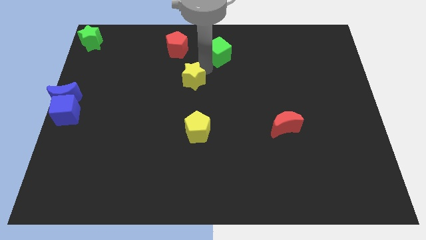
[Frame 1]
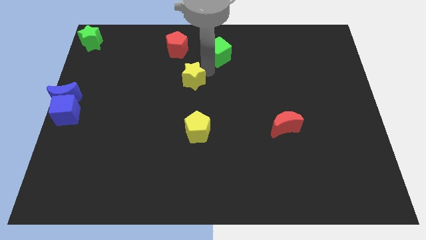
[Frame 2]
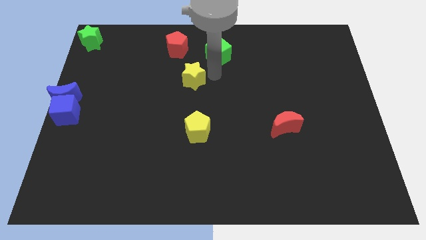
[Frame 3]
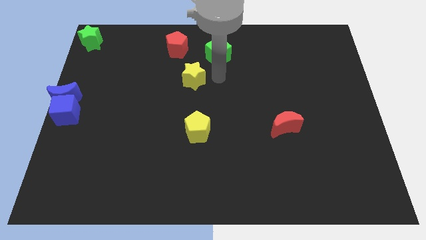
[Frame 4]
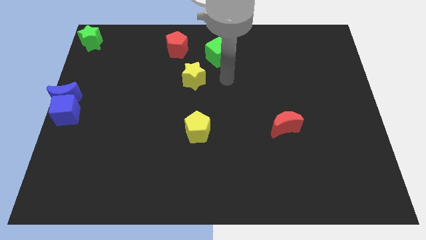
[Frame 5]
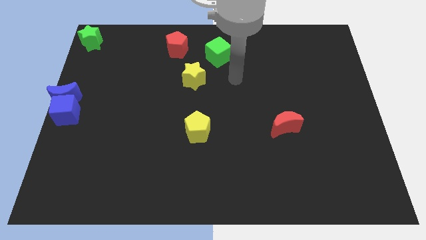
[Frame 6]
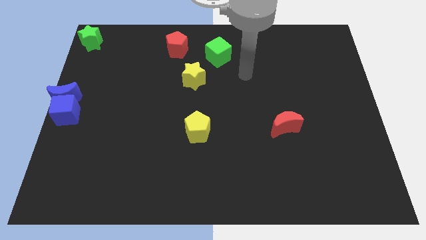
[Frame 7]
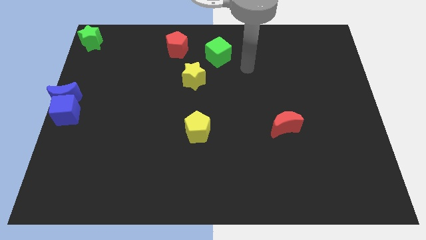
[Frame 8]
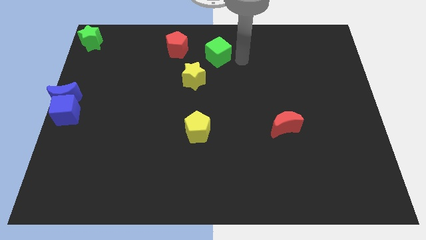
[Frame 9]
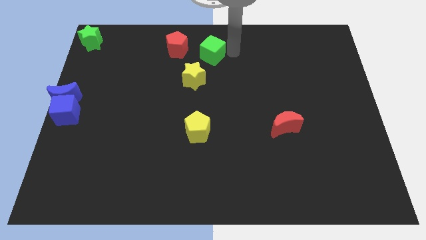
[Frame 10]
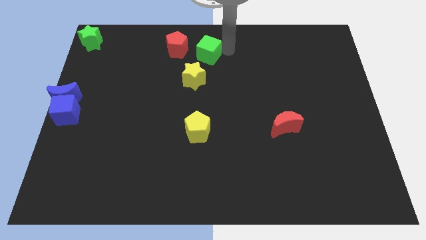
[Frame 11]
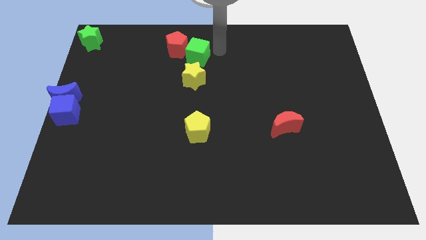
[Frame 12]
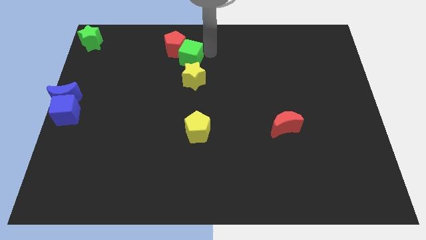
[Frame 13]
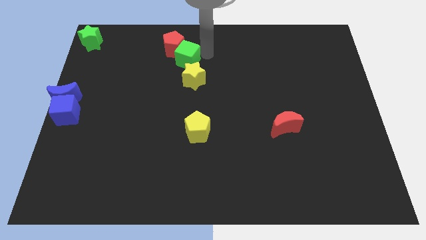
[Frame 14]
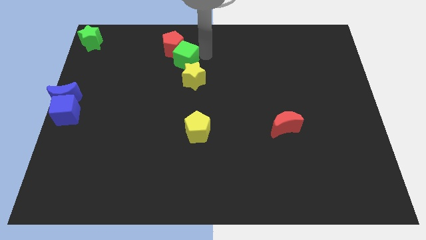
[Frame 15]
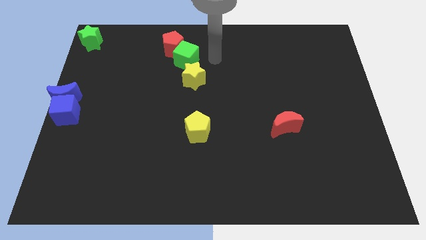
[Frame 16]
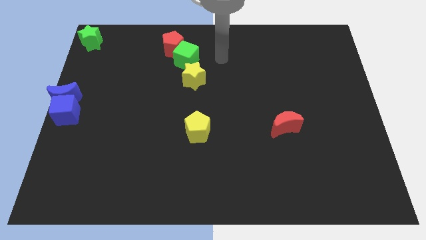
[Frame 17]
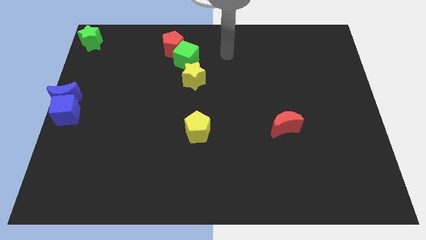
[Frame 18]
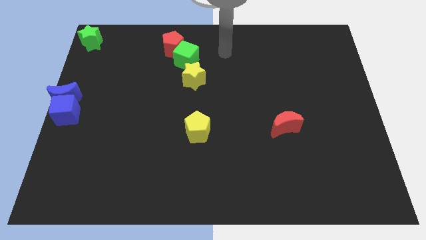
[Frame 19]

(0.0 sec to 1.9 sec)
move the green cube between the red pentagon and yellow star

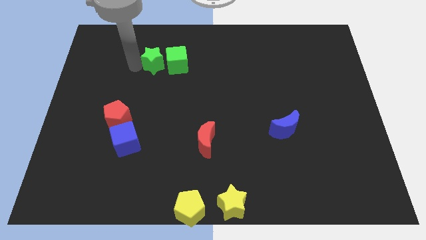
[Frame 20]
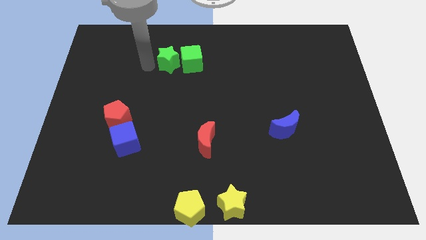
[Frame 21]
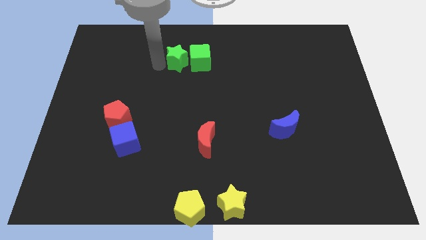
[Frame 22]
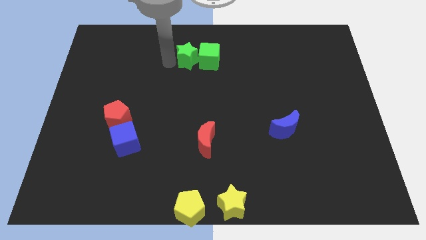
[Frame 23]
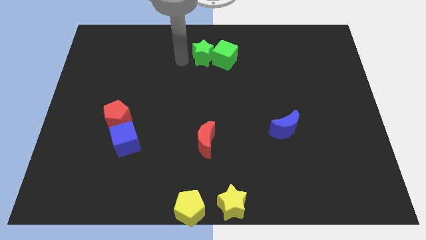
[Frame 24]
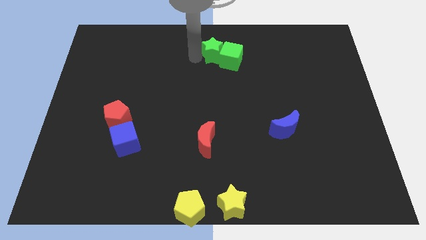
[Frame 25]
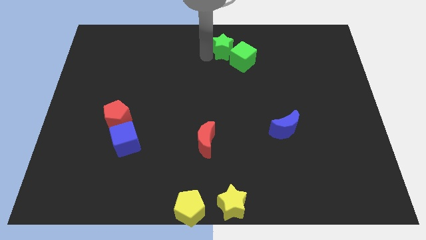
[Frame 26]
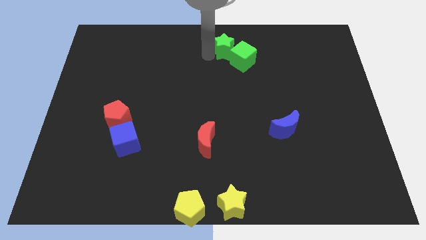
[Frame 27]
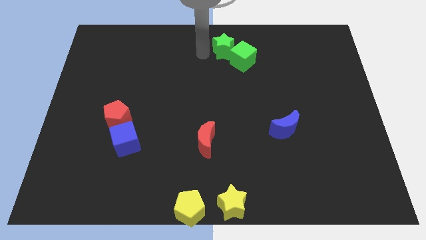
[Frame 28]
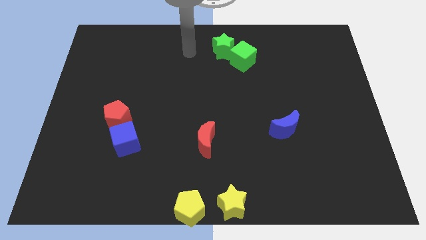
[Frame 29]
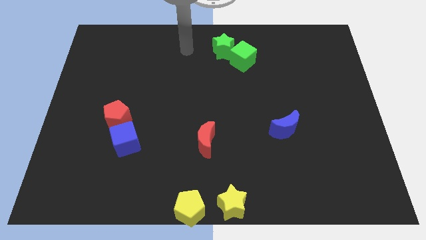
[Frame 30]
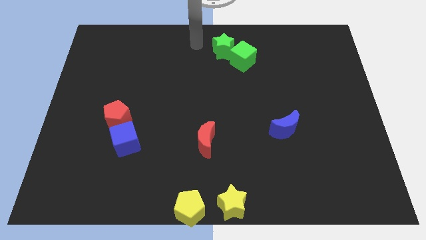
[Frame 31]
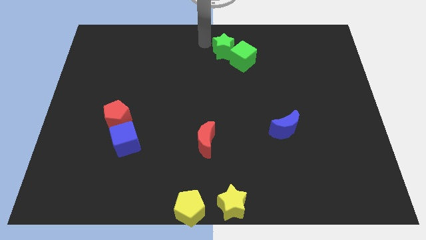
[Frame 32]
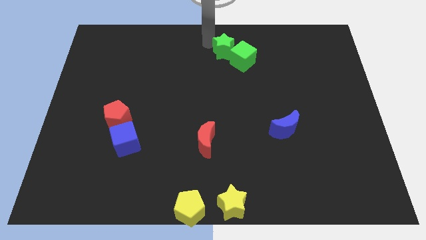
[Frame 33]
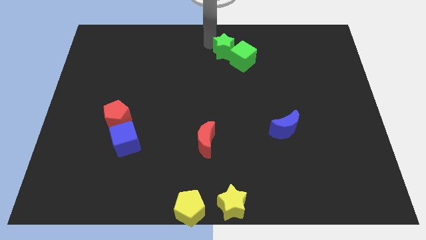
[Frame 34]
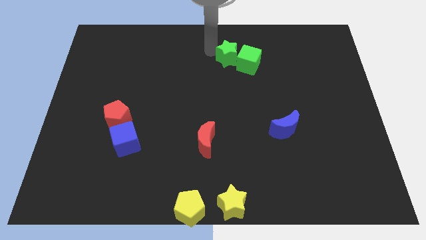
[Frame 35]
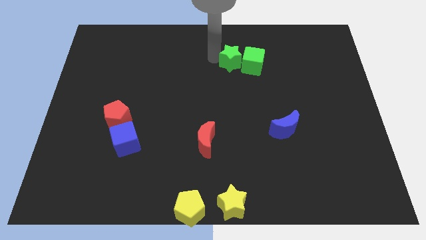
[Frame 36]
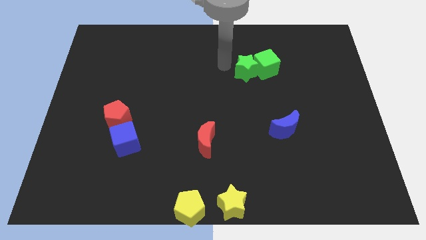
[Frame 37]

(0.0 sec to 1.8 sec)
push green star and green cube towards right side

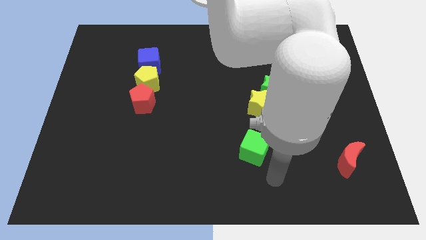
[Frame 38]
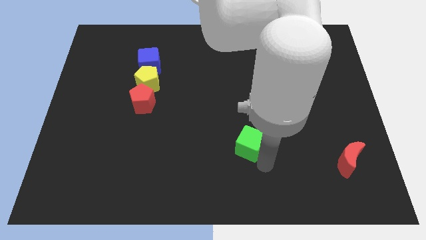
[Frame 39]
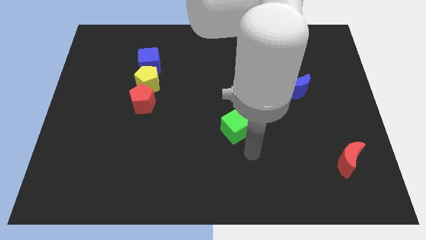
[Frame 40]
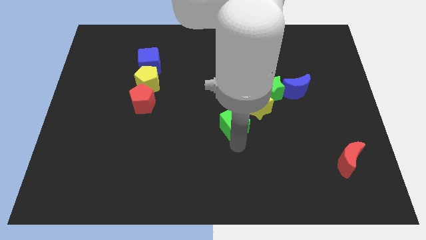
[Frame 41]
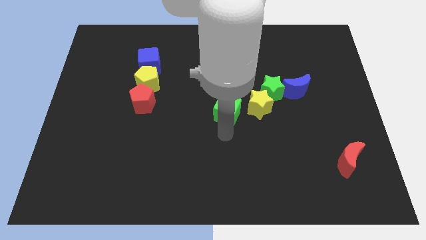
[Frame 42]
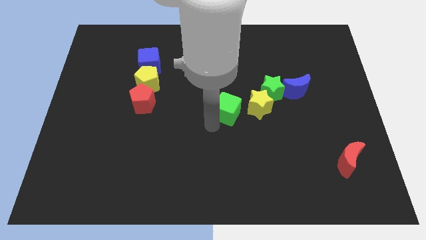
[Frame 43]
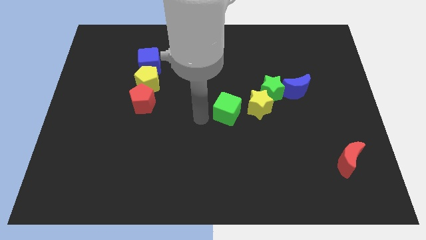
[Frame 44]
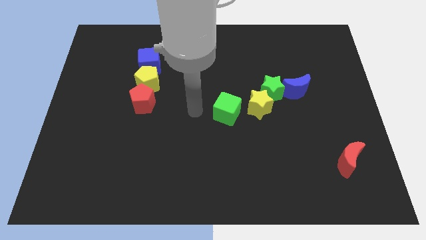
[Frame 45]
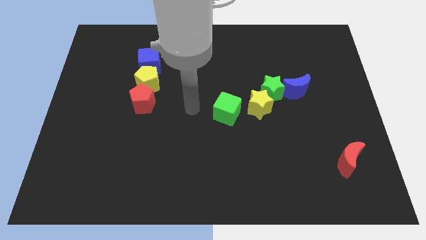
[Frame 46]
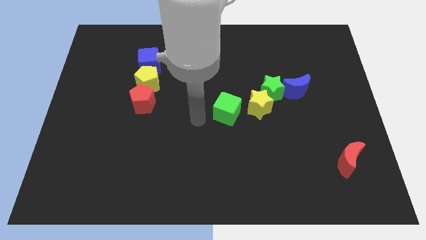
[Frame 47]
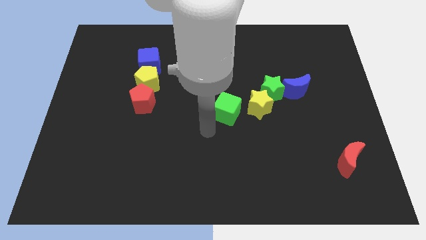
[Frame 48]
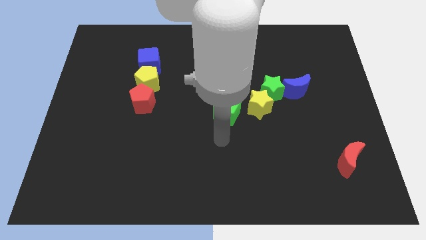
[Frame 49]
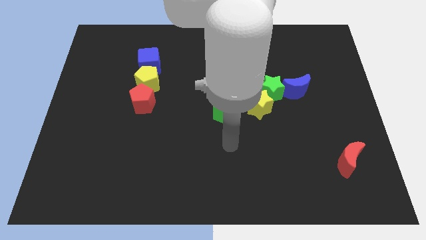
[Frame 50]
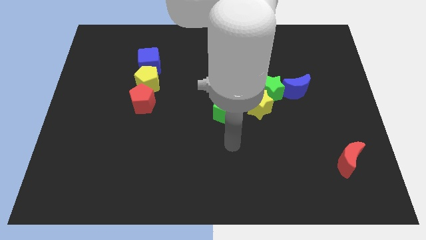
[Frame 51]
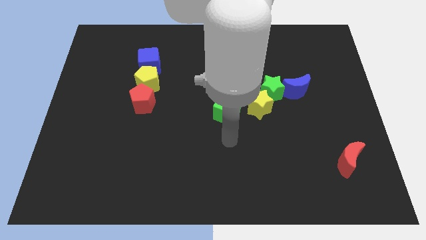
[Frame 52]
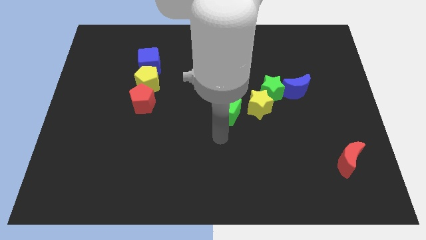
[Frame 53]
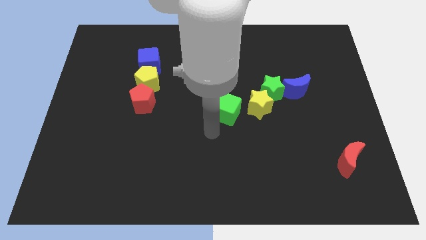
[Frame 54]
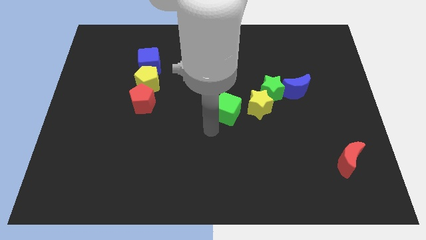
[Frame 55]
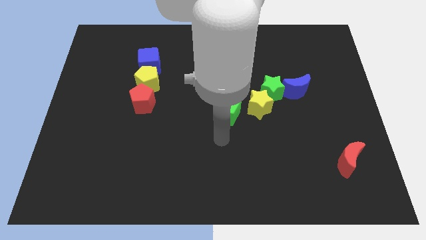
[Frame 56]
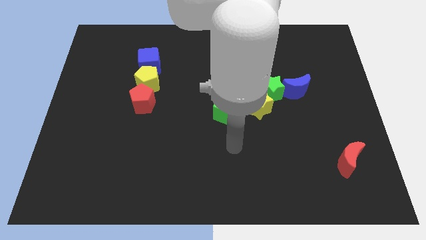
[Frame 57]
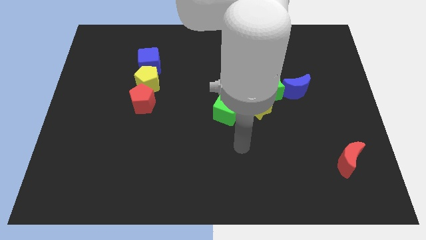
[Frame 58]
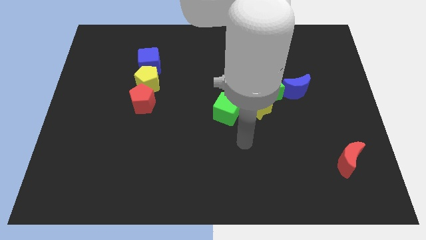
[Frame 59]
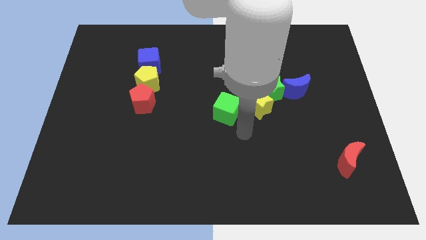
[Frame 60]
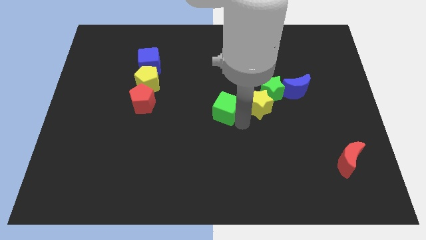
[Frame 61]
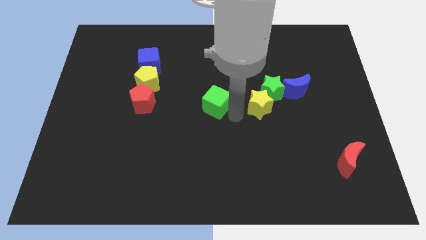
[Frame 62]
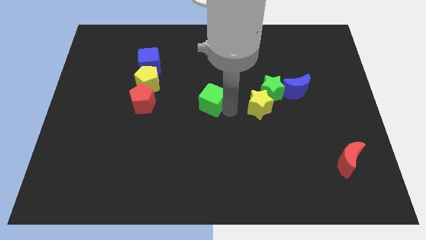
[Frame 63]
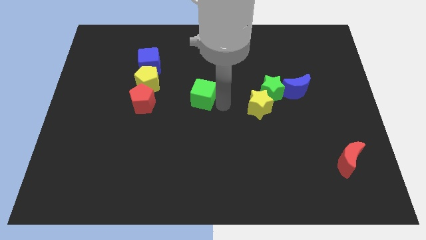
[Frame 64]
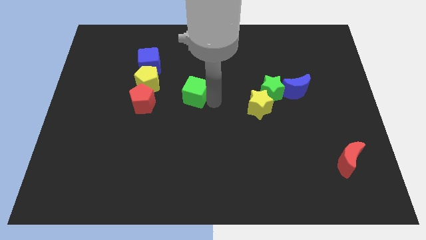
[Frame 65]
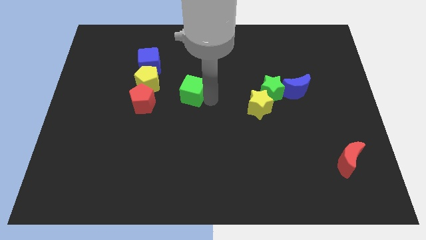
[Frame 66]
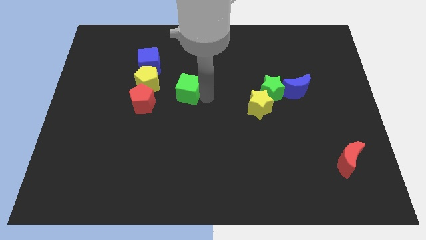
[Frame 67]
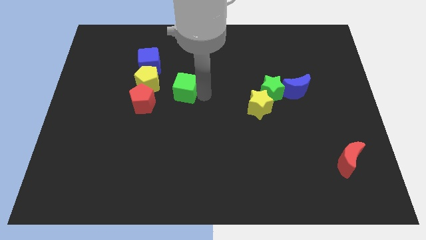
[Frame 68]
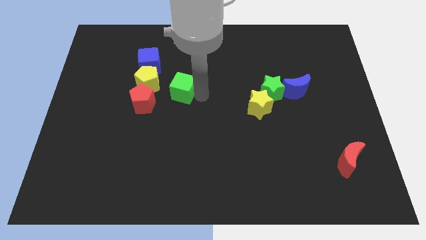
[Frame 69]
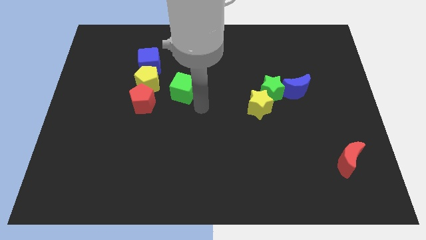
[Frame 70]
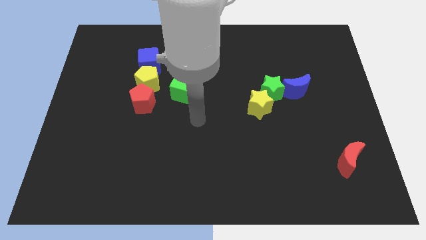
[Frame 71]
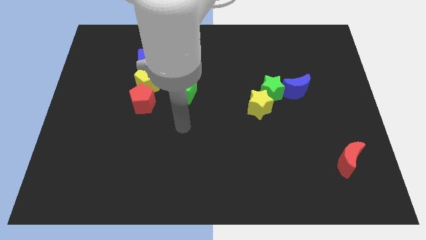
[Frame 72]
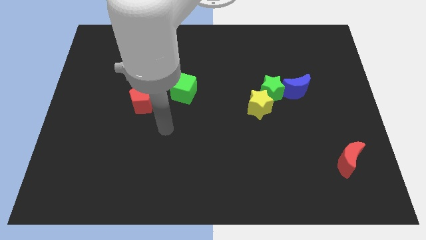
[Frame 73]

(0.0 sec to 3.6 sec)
place the green cube right to the yellow pentagon

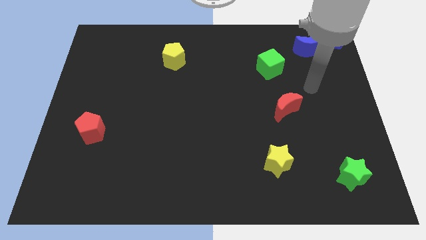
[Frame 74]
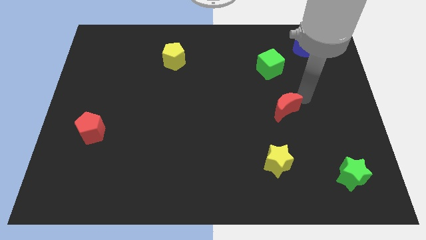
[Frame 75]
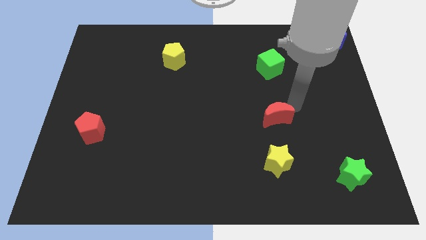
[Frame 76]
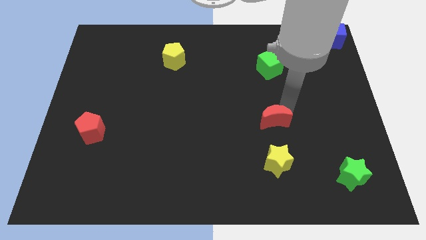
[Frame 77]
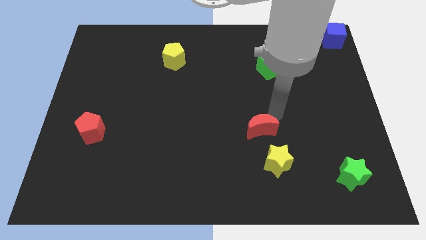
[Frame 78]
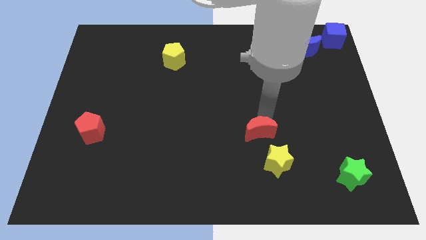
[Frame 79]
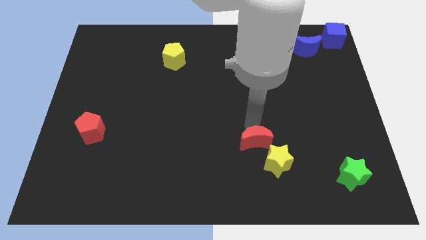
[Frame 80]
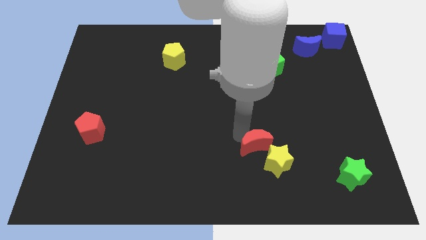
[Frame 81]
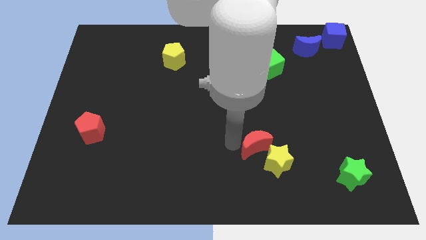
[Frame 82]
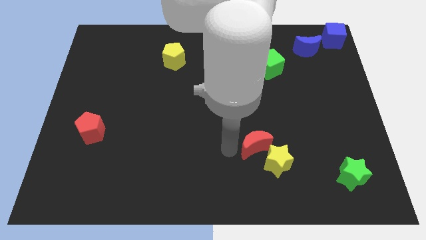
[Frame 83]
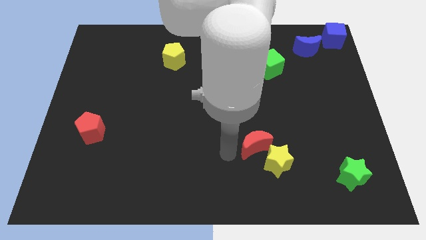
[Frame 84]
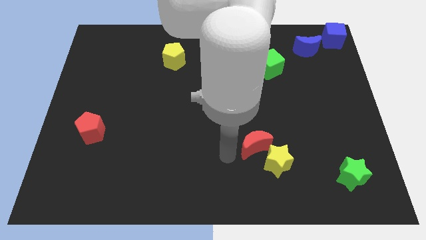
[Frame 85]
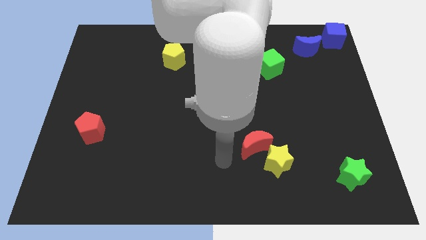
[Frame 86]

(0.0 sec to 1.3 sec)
push the red crescent towards the yellow star

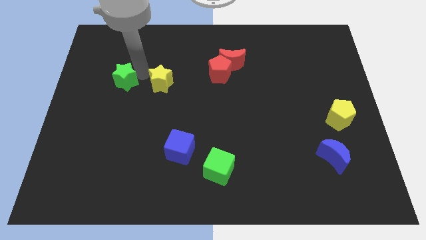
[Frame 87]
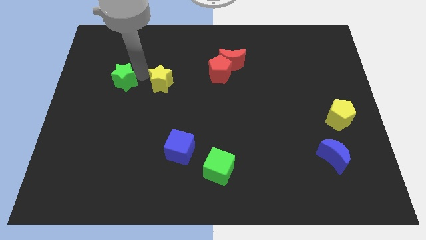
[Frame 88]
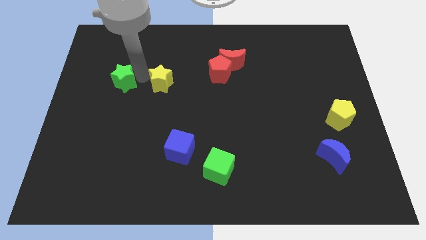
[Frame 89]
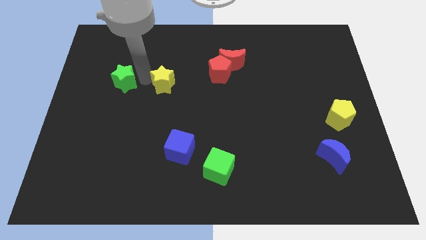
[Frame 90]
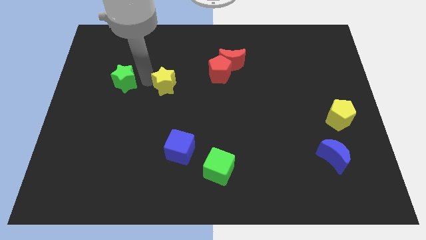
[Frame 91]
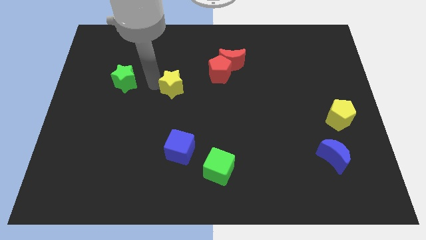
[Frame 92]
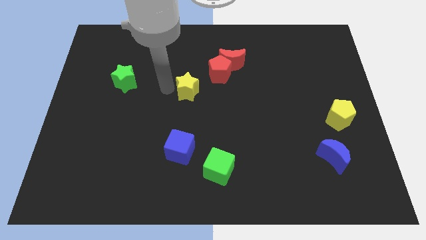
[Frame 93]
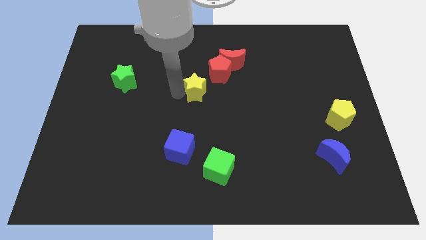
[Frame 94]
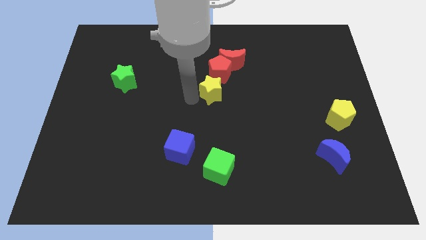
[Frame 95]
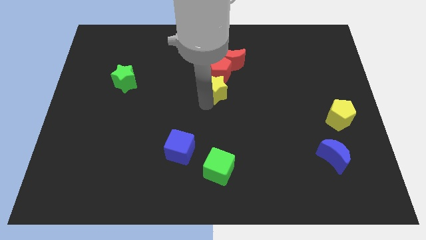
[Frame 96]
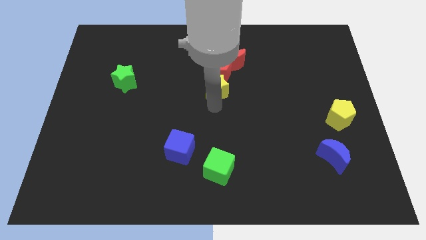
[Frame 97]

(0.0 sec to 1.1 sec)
move the yellow star bottom to the red pentagon
